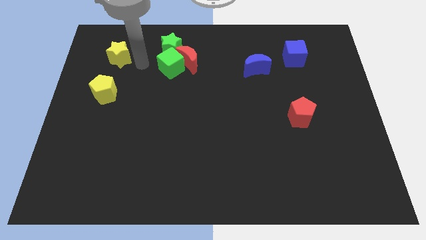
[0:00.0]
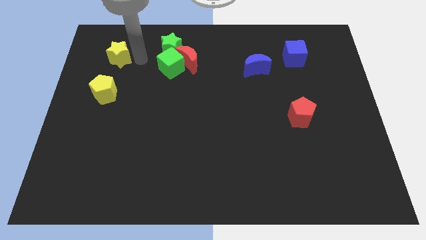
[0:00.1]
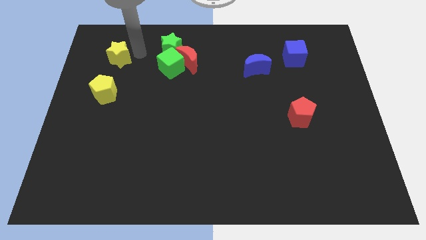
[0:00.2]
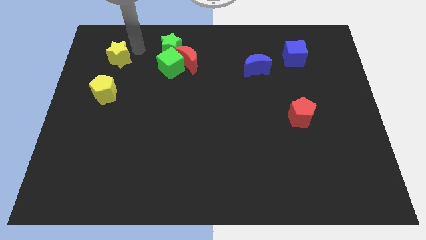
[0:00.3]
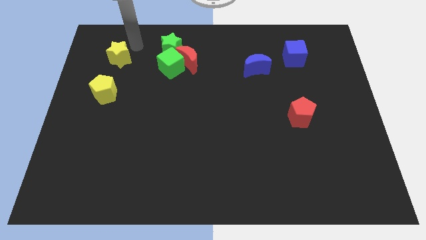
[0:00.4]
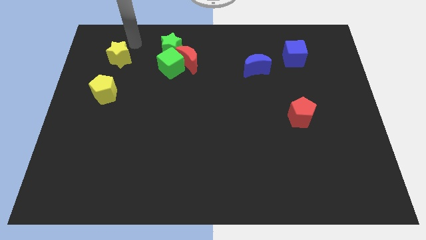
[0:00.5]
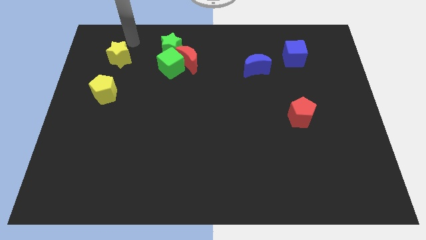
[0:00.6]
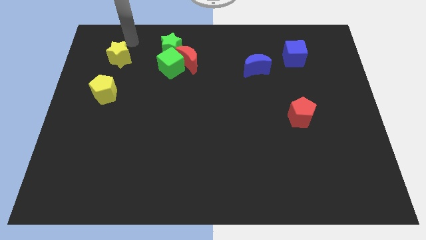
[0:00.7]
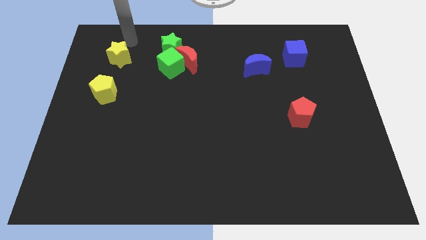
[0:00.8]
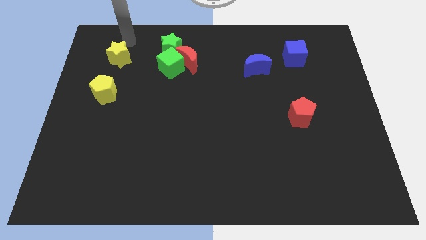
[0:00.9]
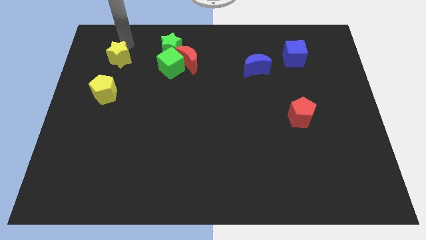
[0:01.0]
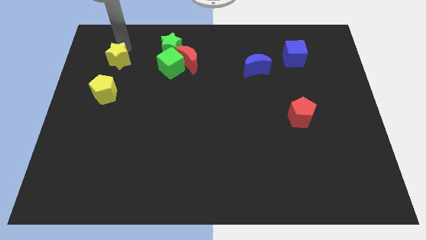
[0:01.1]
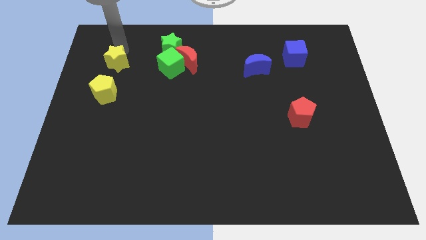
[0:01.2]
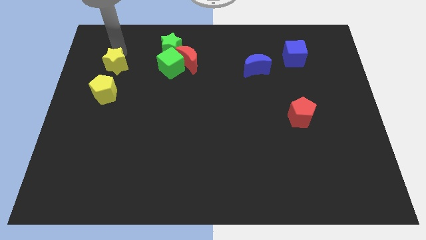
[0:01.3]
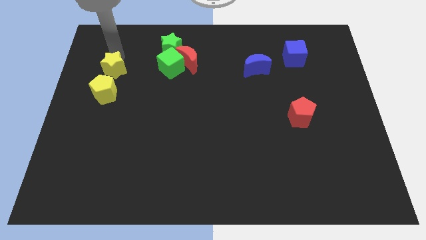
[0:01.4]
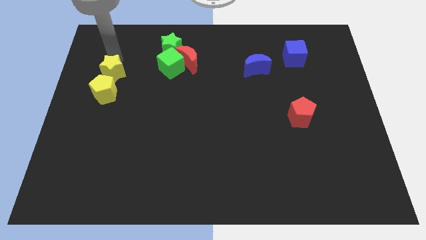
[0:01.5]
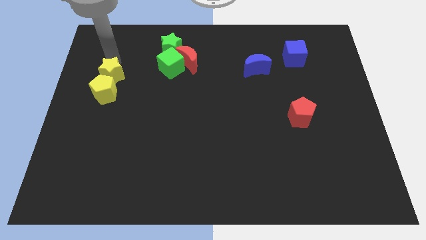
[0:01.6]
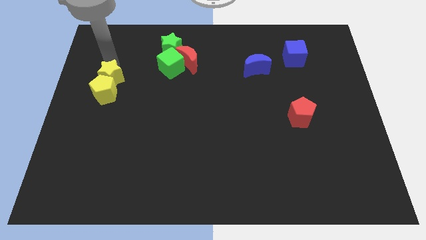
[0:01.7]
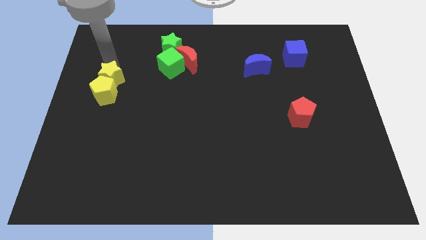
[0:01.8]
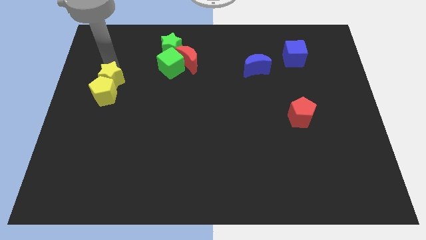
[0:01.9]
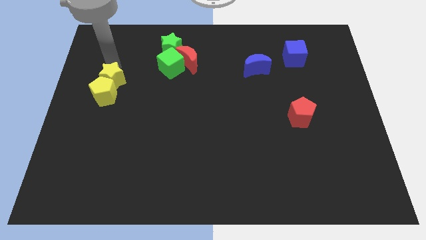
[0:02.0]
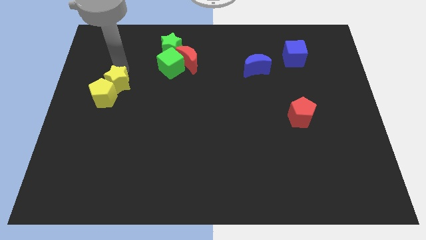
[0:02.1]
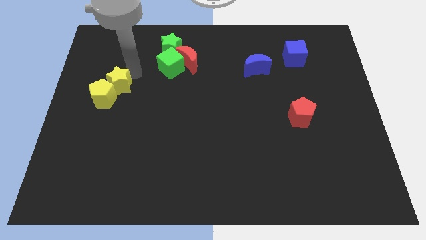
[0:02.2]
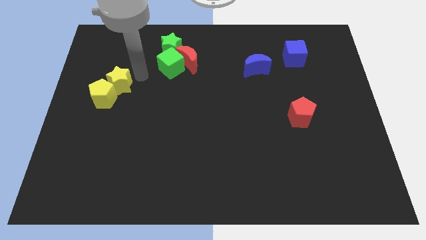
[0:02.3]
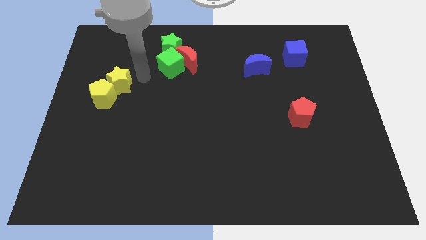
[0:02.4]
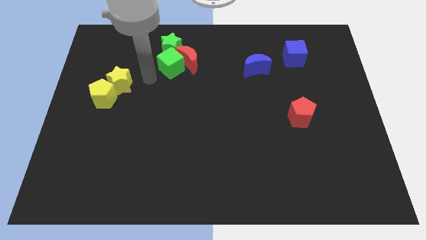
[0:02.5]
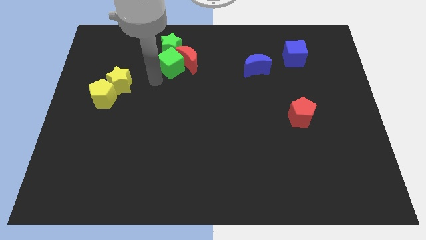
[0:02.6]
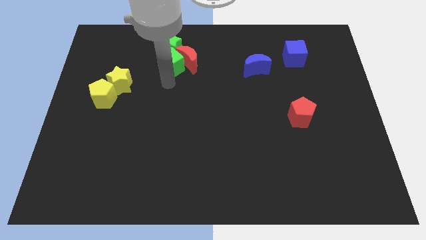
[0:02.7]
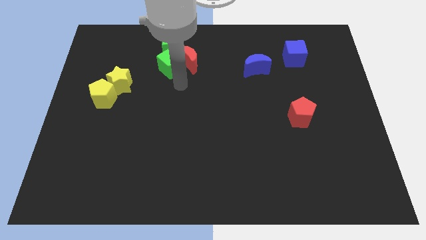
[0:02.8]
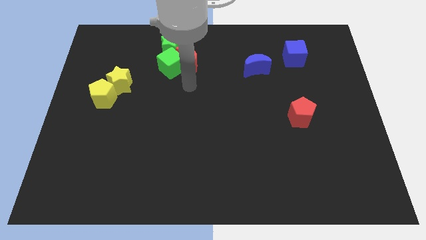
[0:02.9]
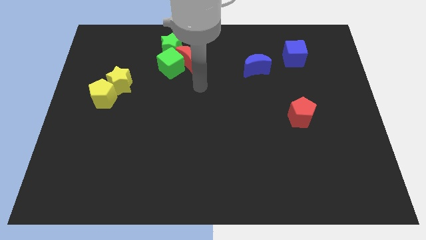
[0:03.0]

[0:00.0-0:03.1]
move the yellow star into the top side of the yellow pentagon

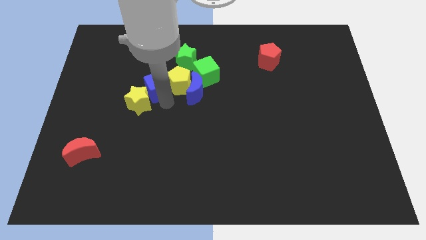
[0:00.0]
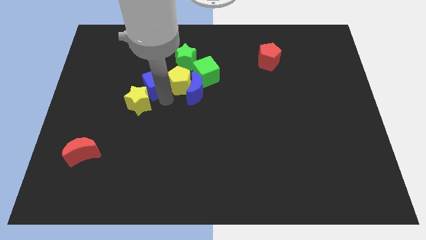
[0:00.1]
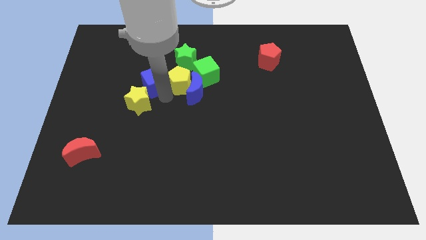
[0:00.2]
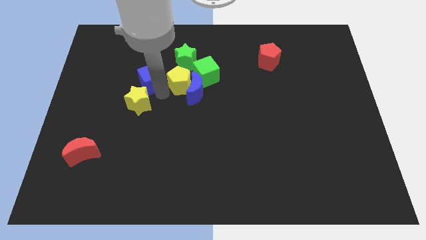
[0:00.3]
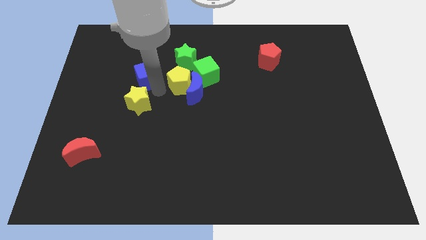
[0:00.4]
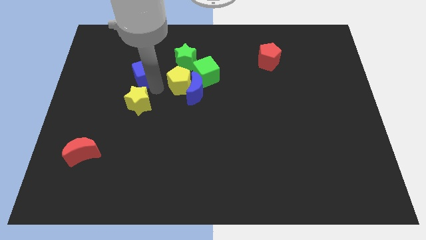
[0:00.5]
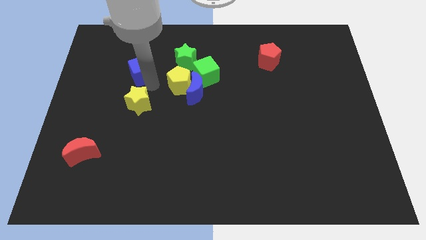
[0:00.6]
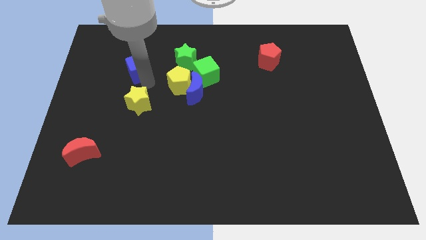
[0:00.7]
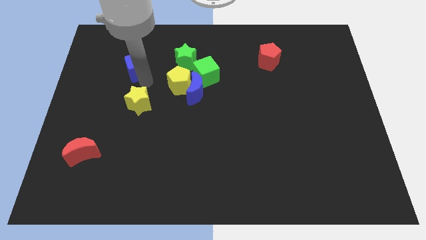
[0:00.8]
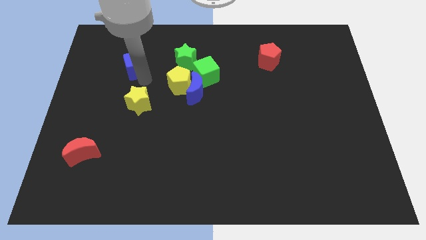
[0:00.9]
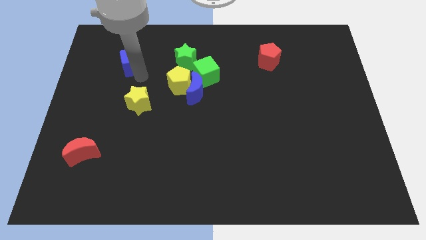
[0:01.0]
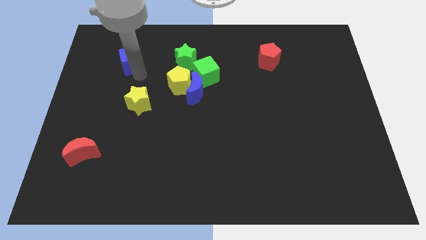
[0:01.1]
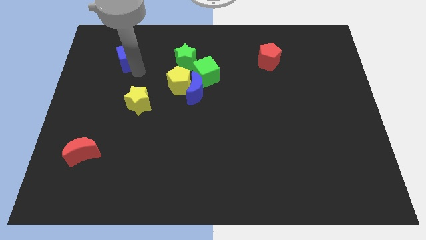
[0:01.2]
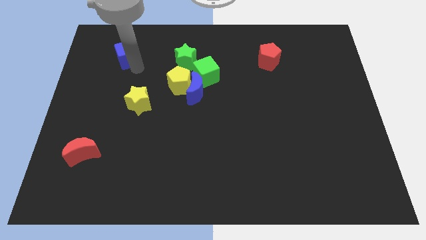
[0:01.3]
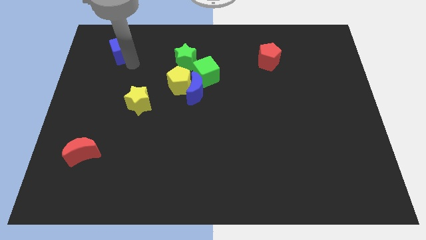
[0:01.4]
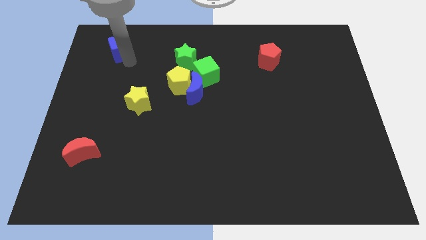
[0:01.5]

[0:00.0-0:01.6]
slide the blue cube away from the group of blocks

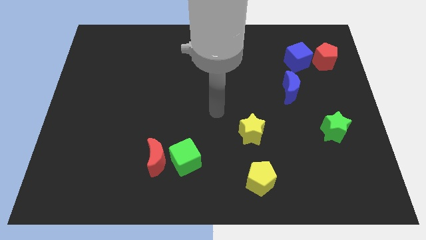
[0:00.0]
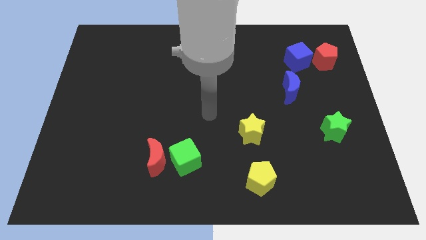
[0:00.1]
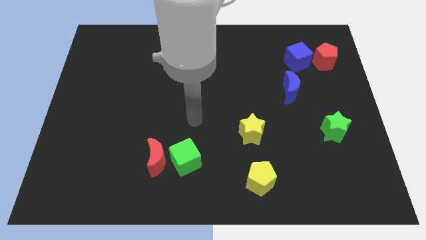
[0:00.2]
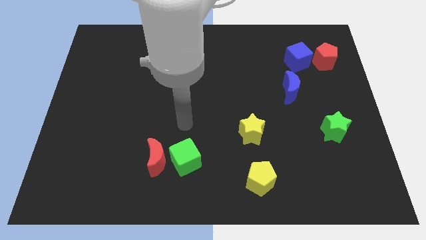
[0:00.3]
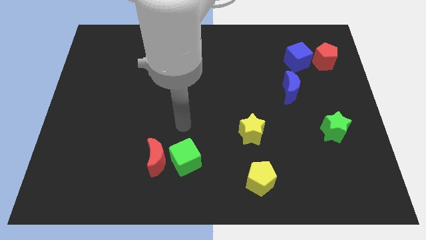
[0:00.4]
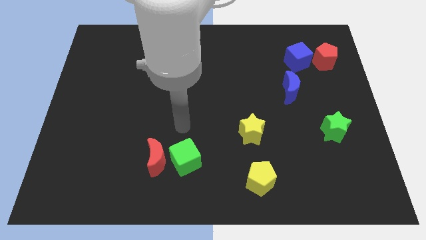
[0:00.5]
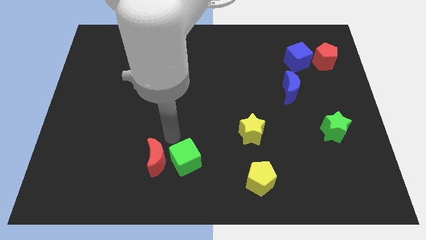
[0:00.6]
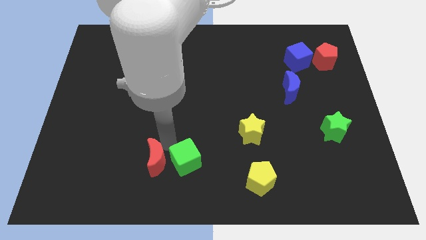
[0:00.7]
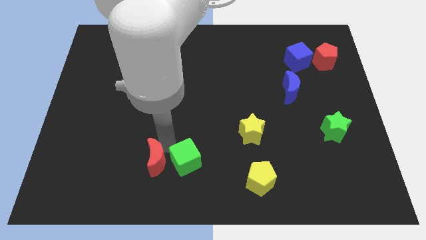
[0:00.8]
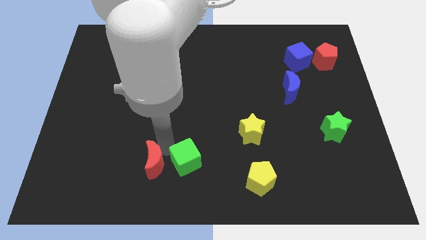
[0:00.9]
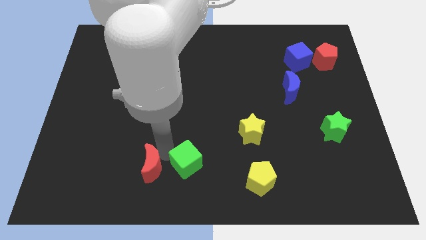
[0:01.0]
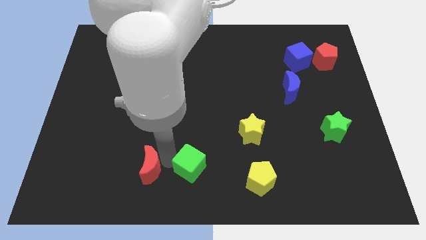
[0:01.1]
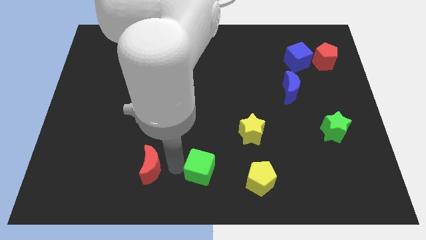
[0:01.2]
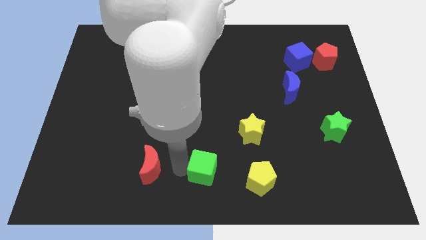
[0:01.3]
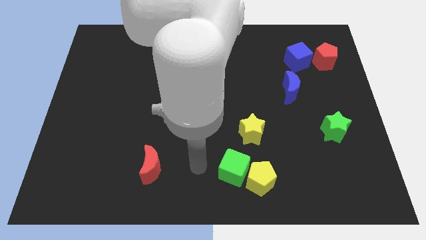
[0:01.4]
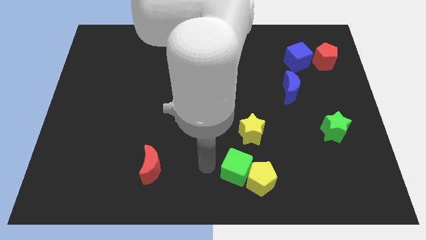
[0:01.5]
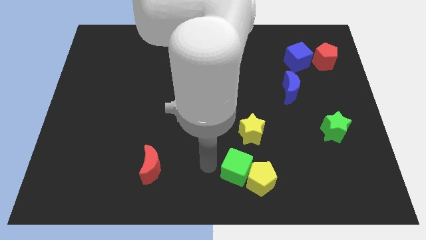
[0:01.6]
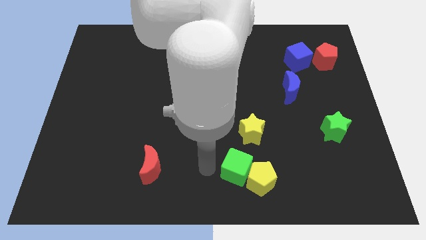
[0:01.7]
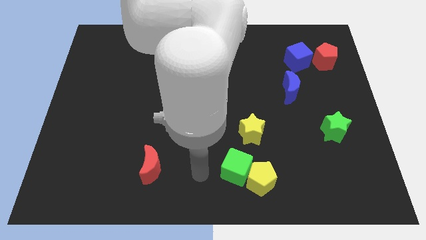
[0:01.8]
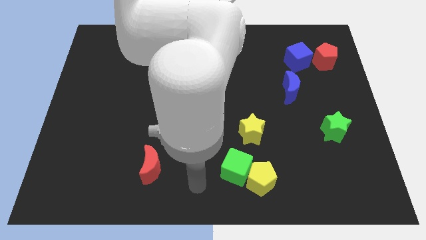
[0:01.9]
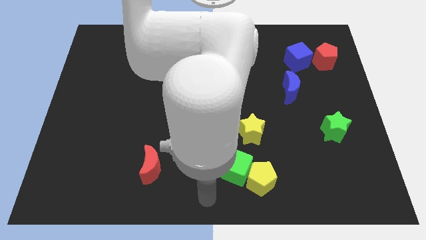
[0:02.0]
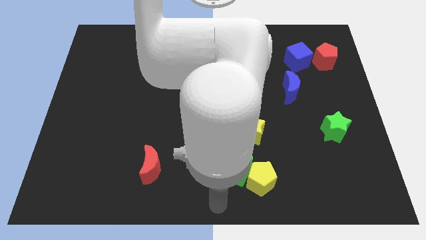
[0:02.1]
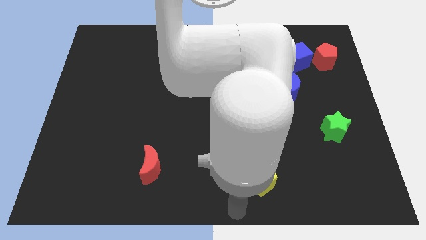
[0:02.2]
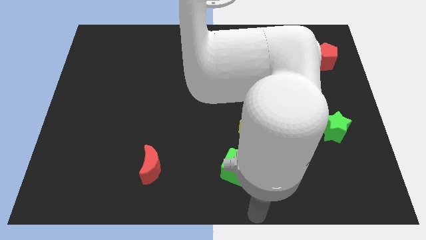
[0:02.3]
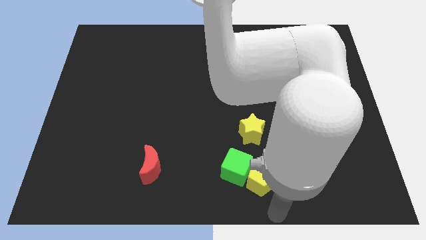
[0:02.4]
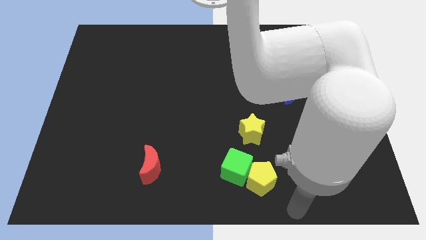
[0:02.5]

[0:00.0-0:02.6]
move green cube left beside green cube

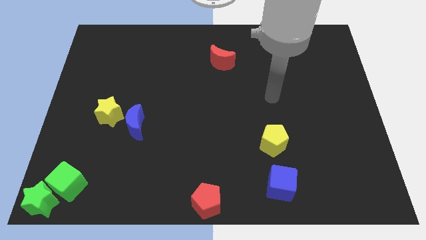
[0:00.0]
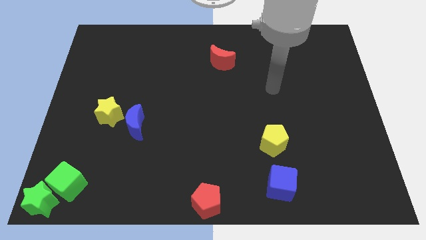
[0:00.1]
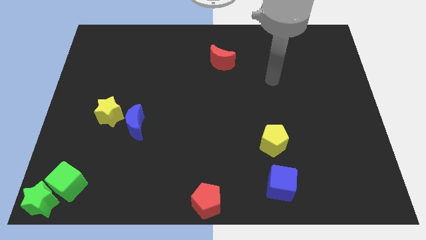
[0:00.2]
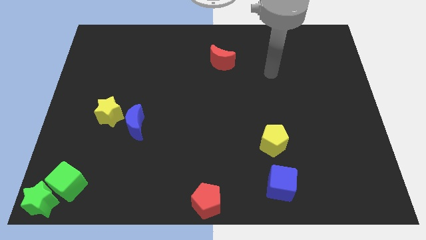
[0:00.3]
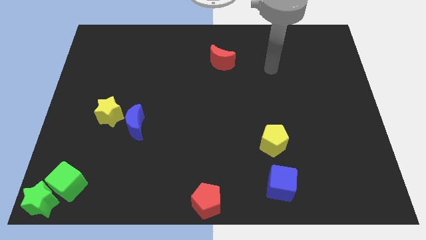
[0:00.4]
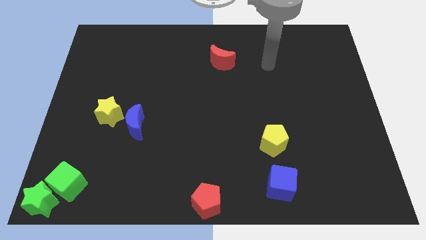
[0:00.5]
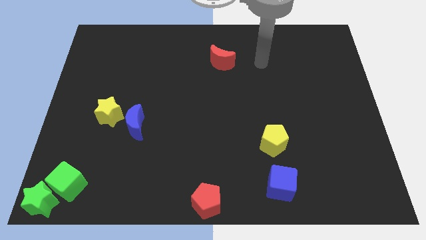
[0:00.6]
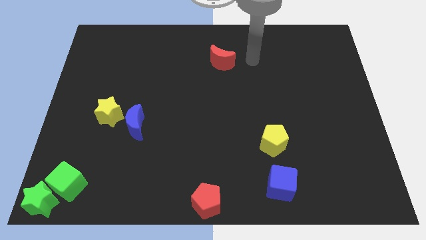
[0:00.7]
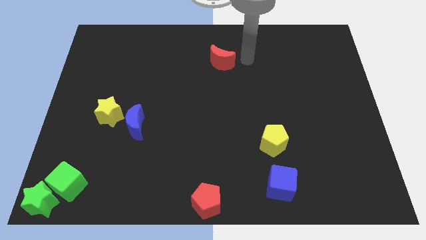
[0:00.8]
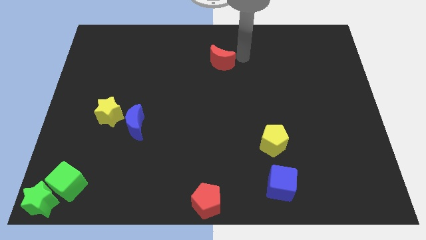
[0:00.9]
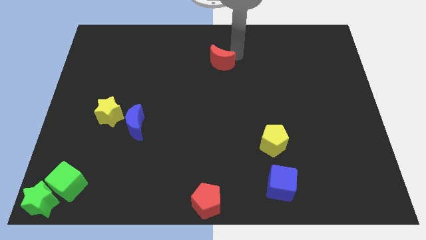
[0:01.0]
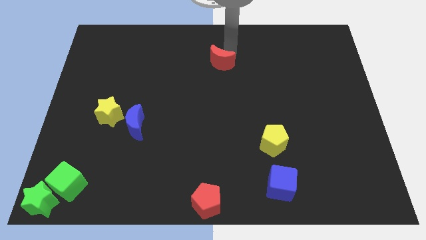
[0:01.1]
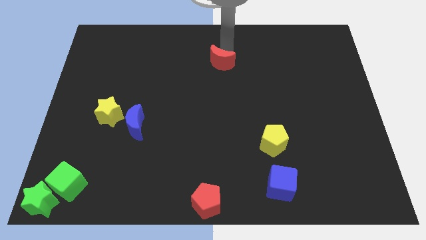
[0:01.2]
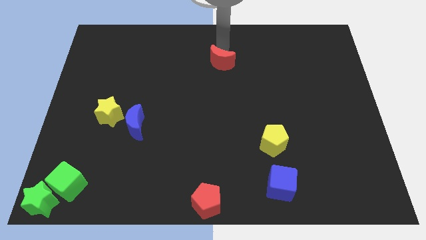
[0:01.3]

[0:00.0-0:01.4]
move your arm to the top of the red moon

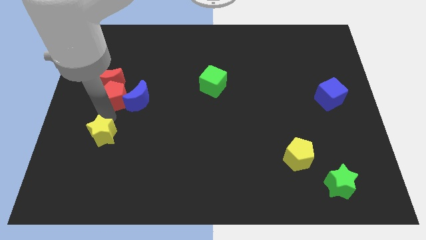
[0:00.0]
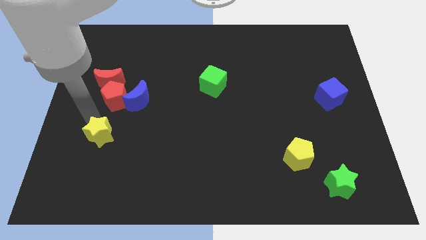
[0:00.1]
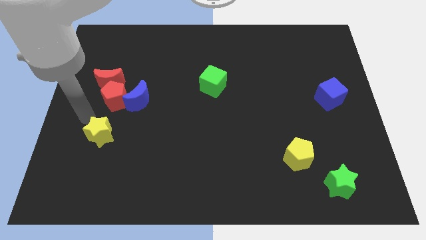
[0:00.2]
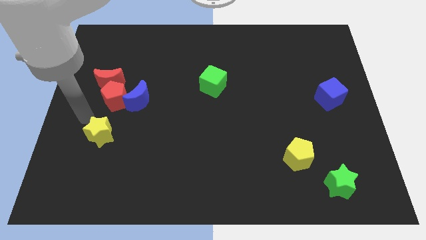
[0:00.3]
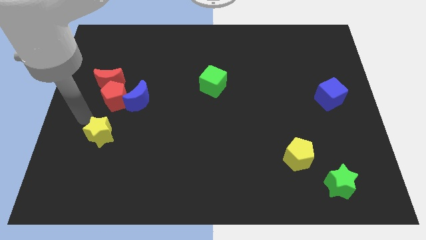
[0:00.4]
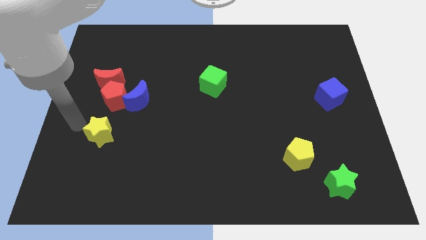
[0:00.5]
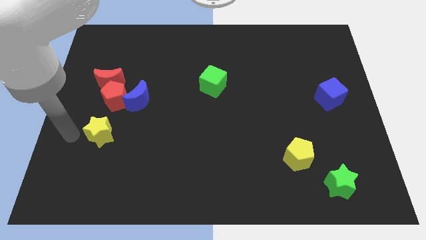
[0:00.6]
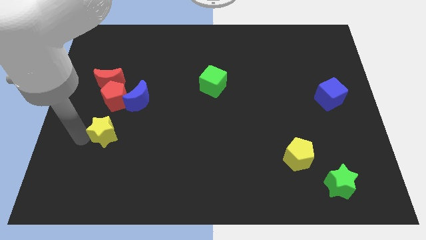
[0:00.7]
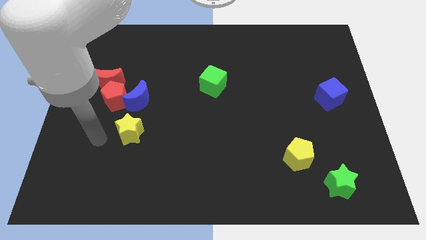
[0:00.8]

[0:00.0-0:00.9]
push the yellow star to the bottom side of the blue moon
